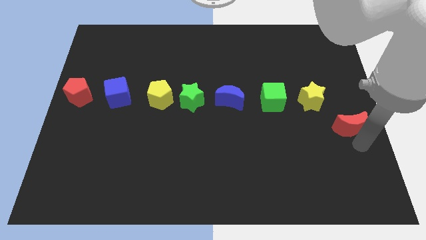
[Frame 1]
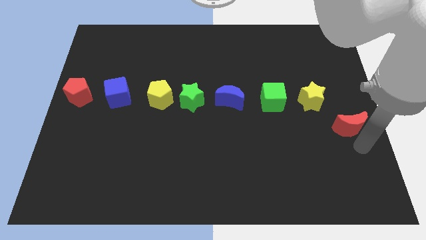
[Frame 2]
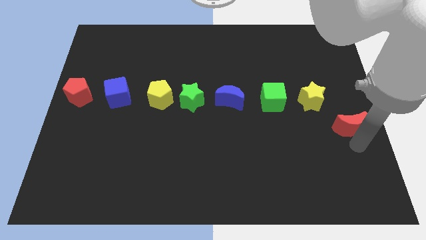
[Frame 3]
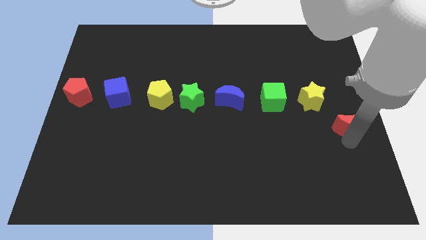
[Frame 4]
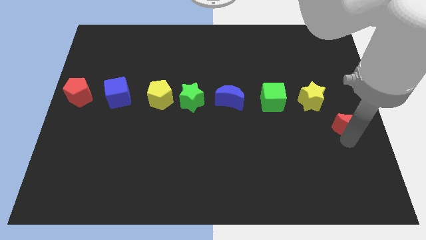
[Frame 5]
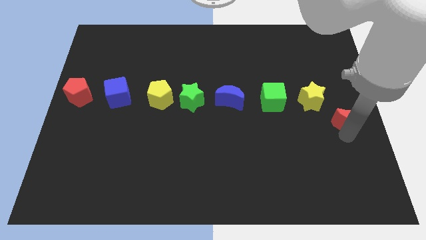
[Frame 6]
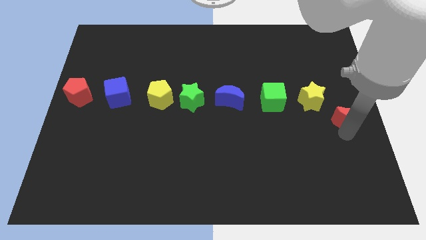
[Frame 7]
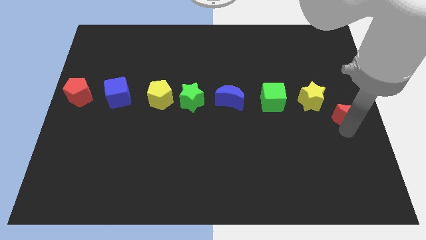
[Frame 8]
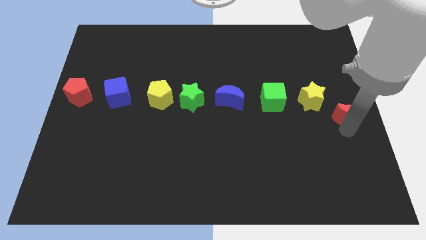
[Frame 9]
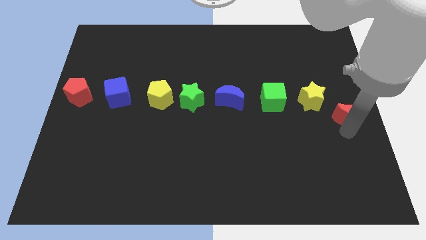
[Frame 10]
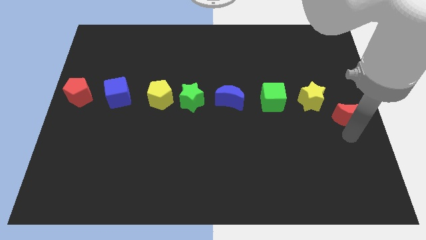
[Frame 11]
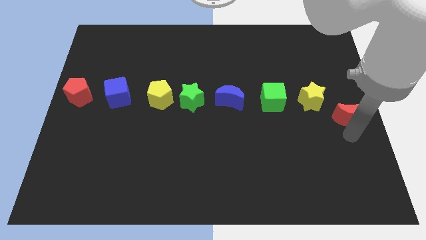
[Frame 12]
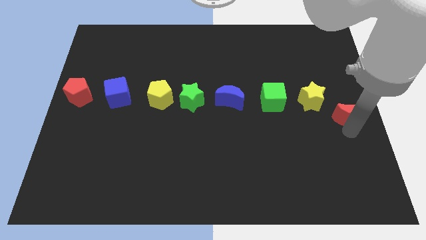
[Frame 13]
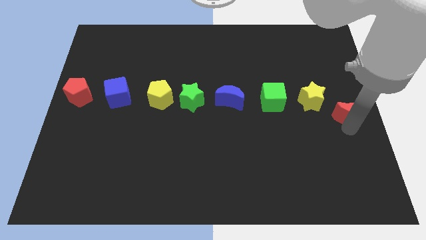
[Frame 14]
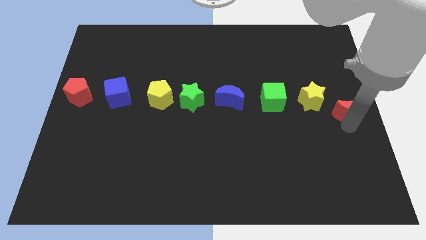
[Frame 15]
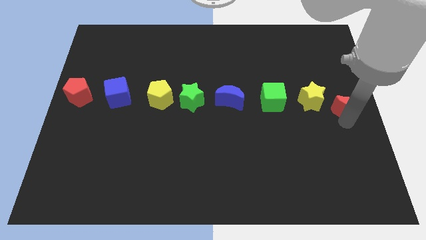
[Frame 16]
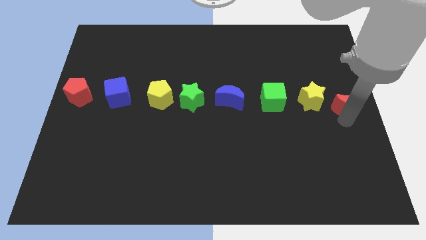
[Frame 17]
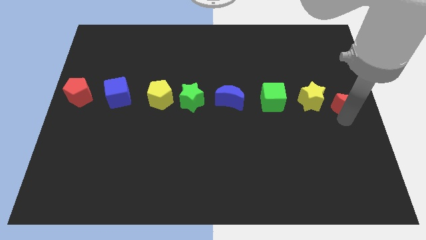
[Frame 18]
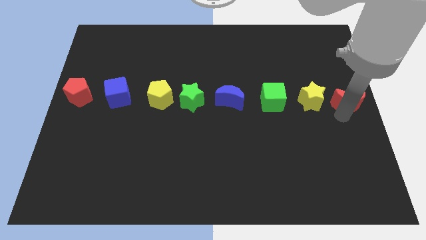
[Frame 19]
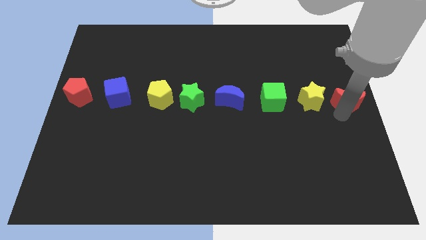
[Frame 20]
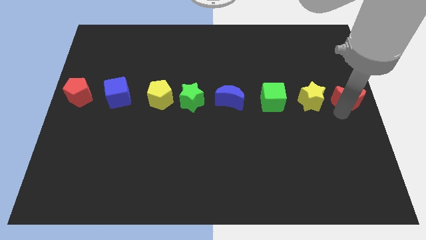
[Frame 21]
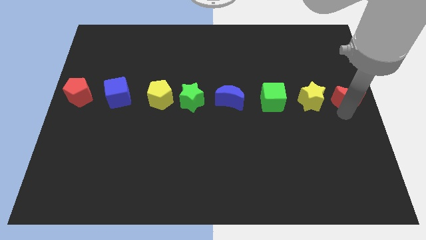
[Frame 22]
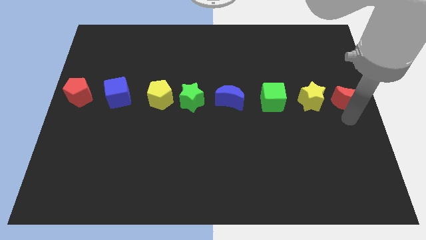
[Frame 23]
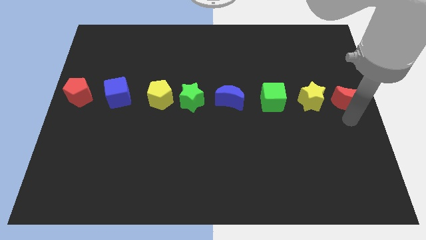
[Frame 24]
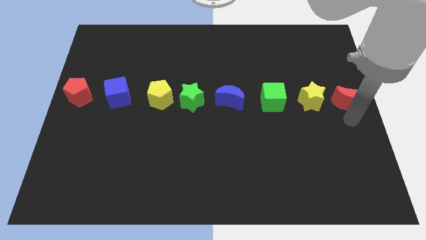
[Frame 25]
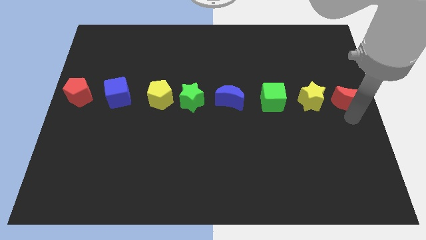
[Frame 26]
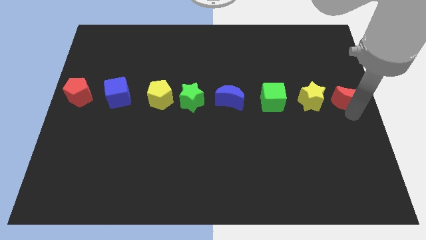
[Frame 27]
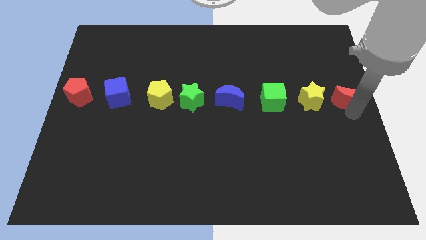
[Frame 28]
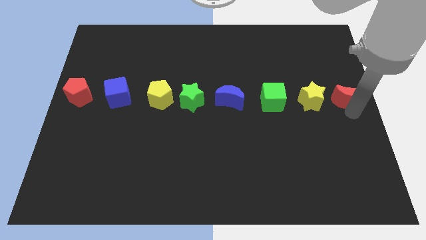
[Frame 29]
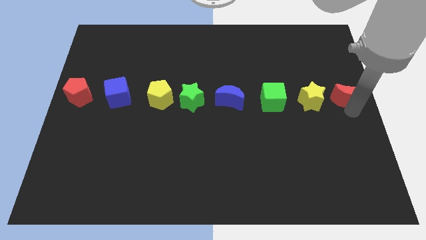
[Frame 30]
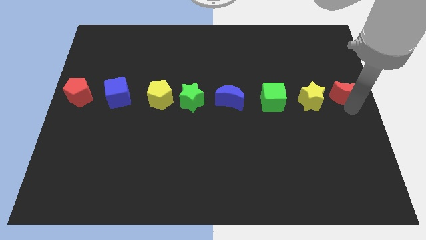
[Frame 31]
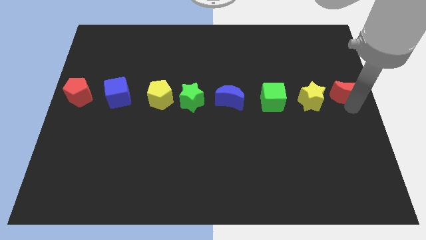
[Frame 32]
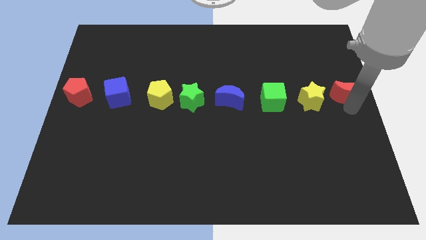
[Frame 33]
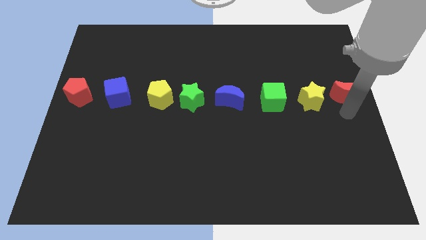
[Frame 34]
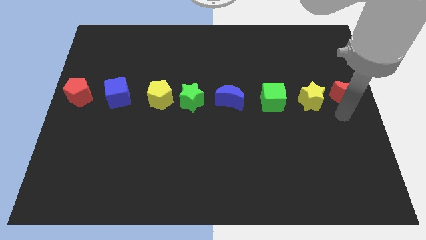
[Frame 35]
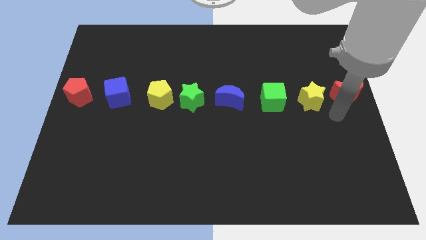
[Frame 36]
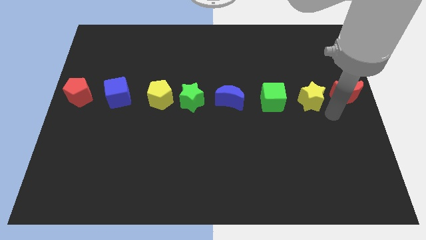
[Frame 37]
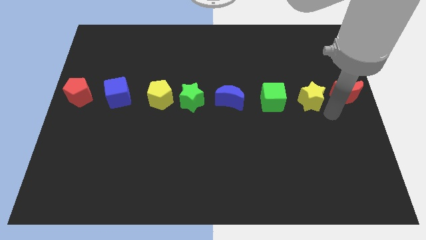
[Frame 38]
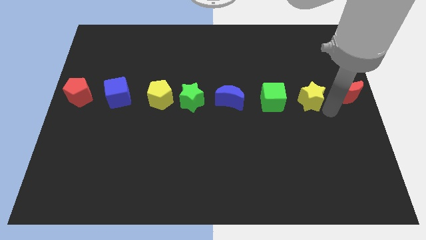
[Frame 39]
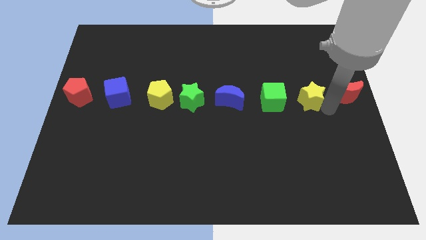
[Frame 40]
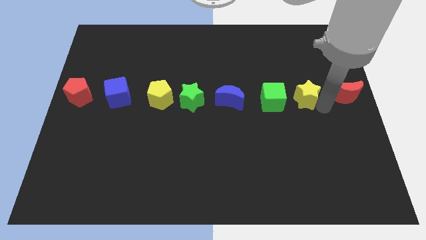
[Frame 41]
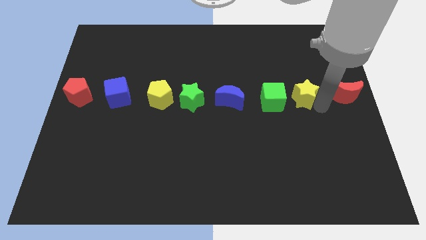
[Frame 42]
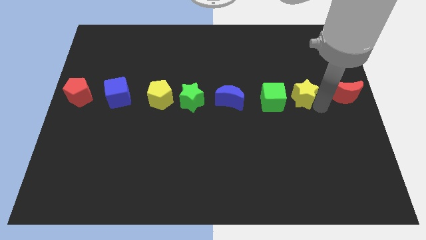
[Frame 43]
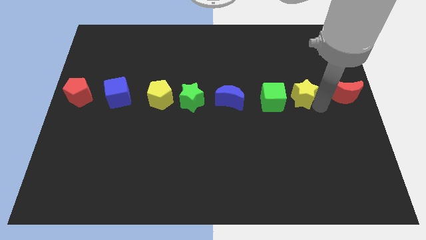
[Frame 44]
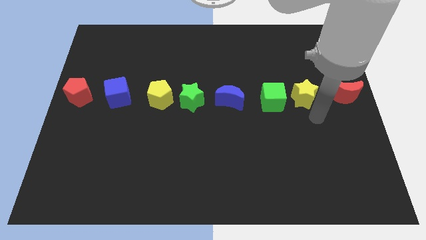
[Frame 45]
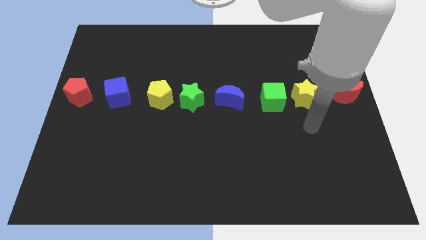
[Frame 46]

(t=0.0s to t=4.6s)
place red moon to the right of the yellow star

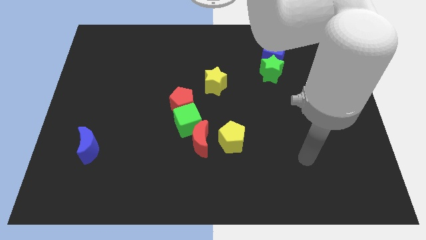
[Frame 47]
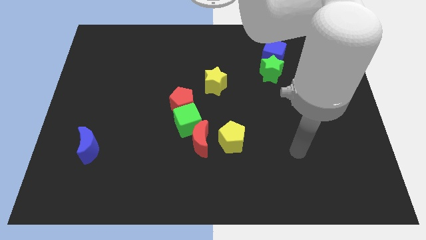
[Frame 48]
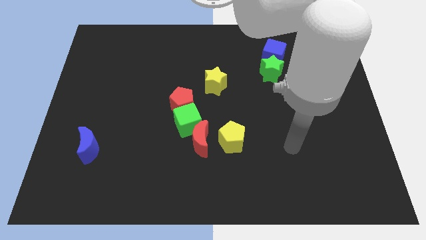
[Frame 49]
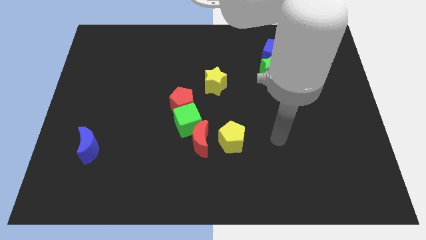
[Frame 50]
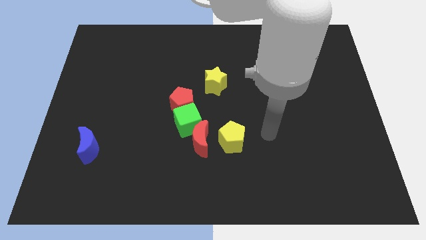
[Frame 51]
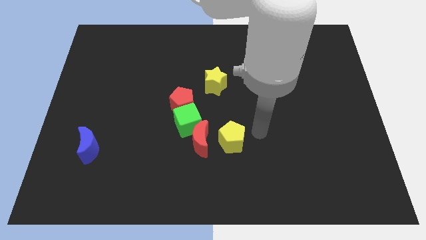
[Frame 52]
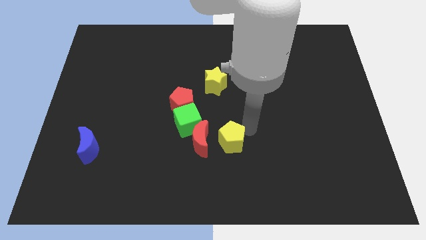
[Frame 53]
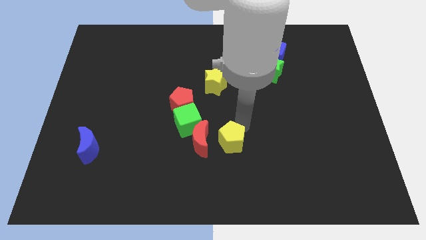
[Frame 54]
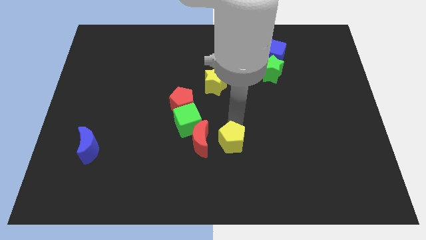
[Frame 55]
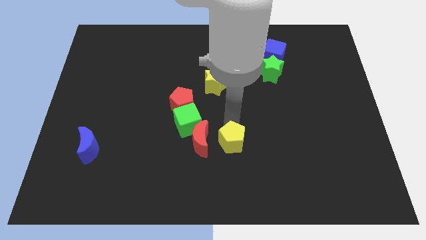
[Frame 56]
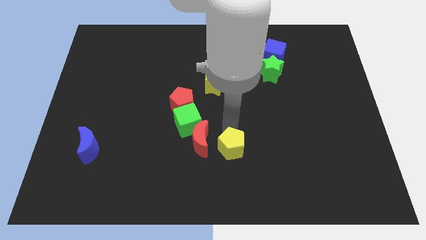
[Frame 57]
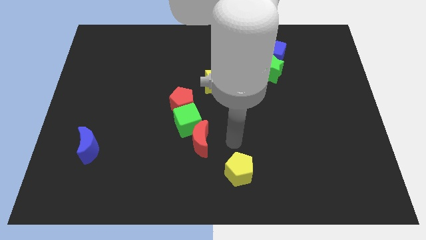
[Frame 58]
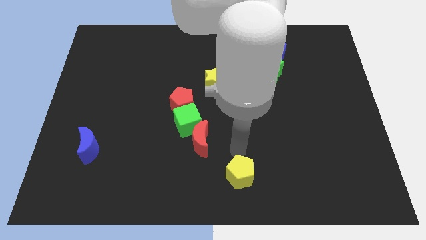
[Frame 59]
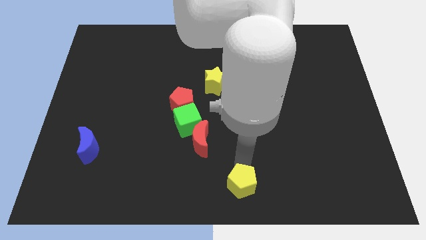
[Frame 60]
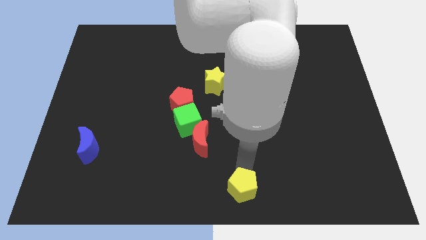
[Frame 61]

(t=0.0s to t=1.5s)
slide the yellow pentagon towards the bottom center

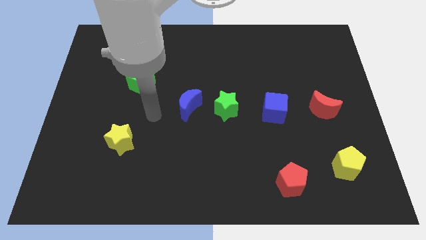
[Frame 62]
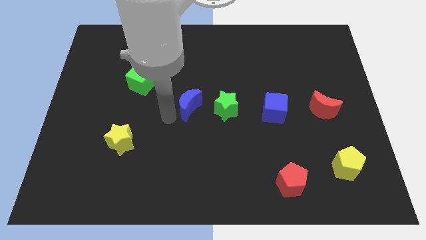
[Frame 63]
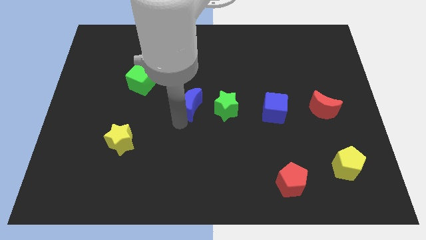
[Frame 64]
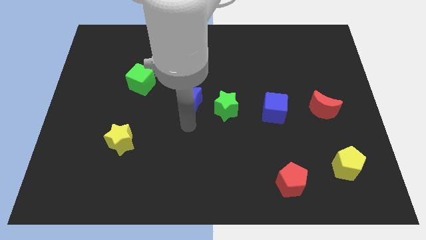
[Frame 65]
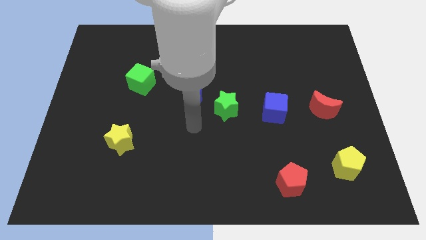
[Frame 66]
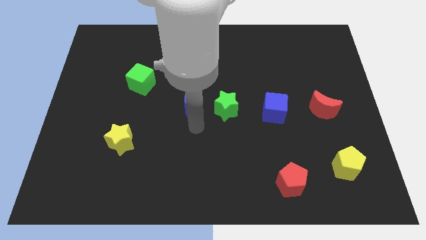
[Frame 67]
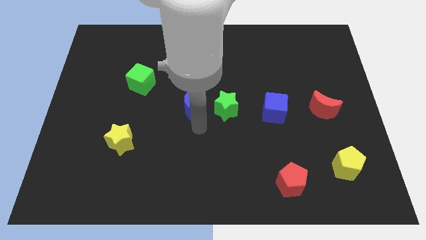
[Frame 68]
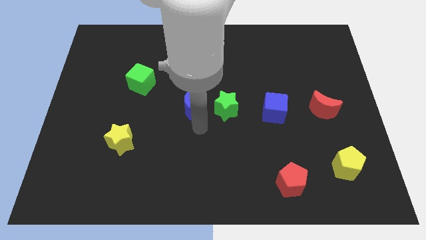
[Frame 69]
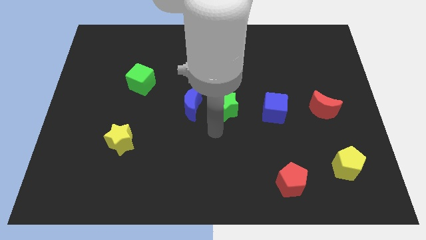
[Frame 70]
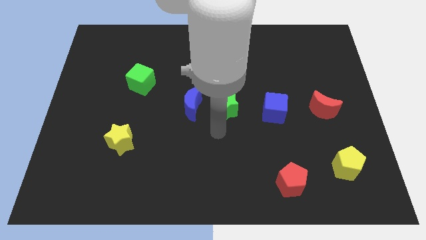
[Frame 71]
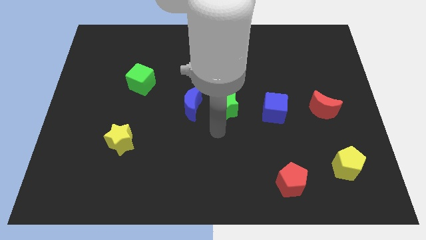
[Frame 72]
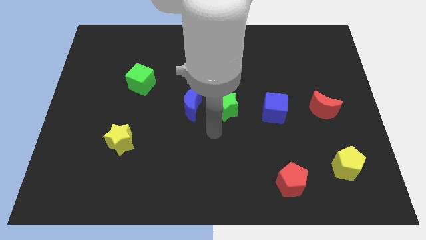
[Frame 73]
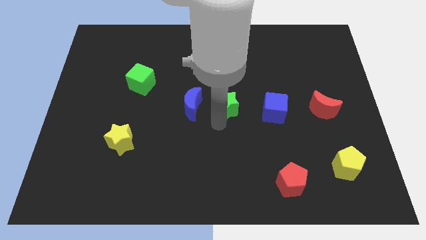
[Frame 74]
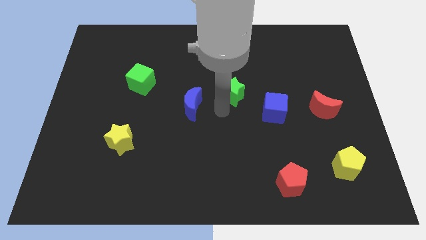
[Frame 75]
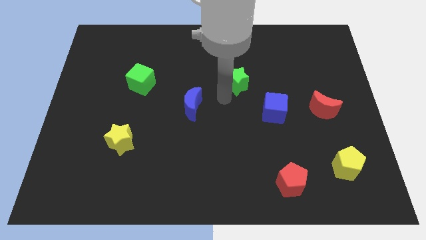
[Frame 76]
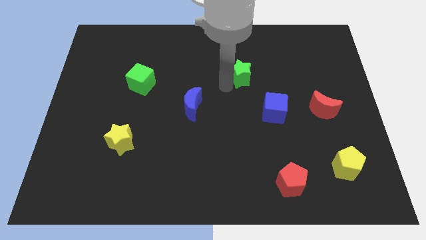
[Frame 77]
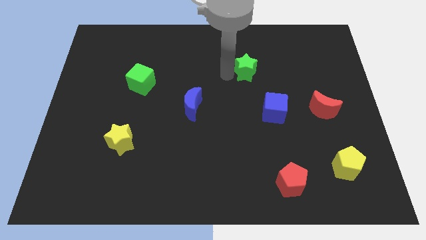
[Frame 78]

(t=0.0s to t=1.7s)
move the green star up

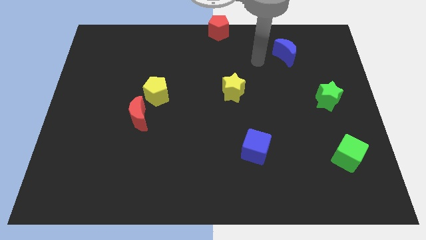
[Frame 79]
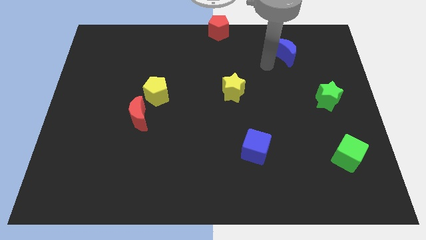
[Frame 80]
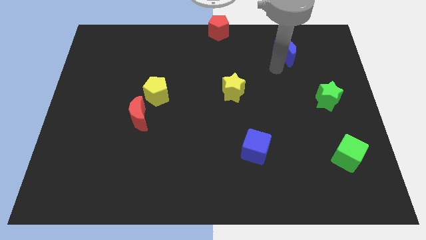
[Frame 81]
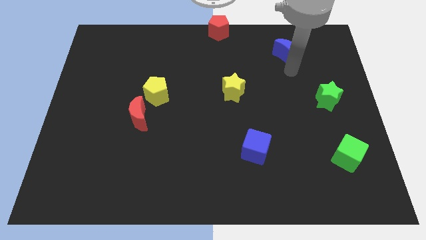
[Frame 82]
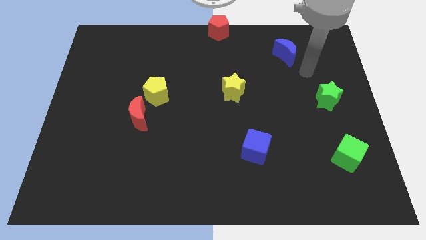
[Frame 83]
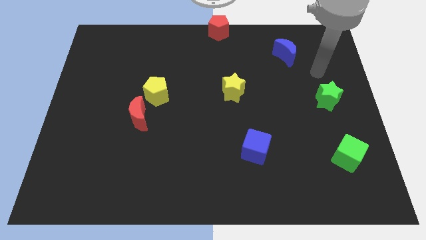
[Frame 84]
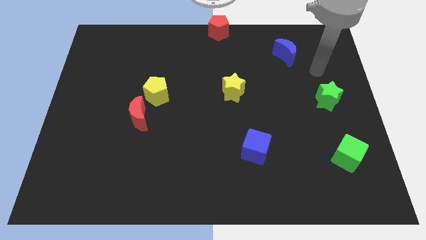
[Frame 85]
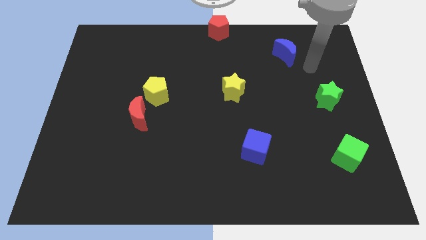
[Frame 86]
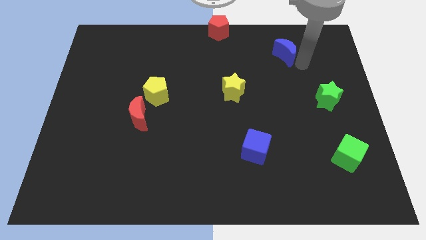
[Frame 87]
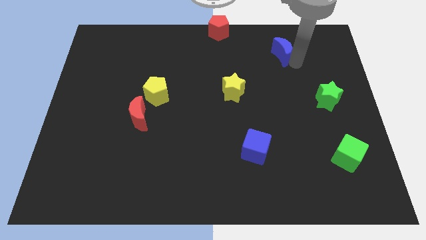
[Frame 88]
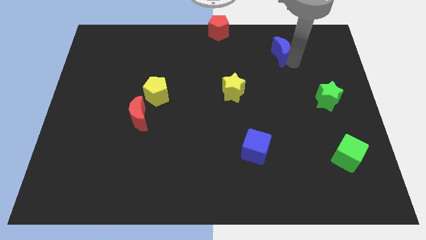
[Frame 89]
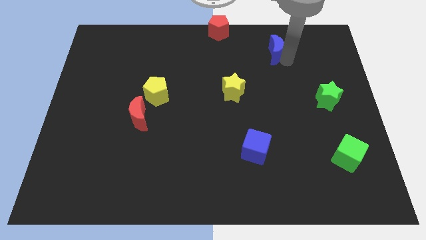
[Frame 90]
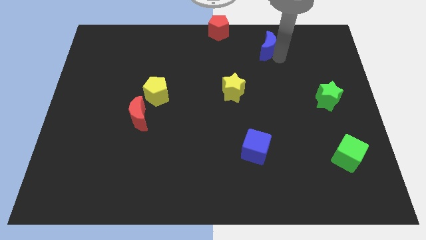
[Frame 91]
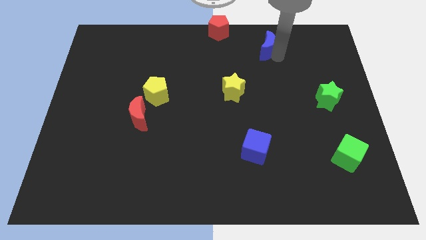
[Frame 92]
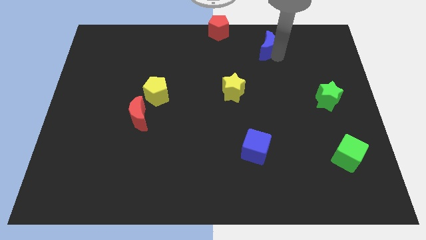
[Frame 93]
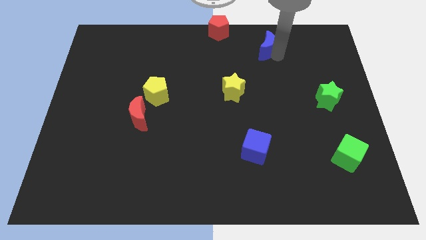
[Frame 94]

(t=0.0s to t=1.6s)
move the blue crescent diagonally on the top right side of the yellow star
